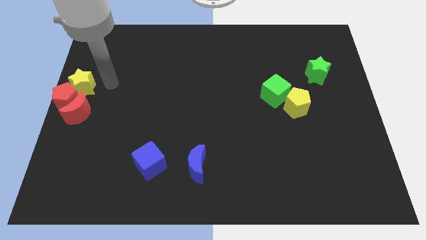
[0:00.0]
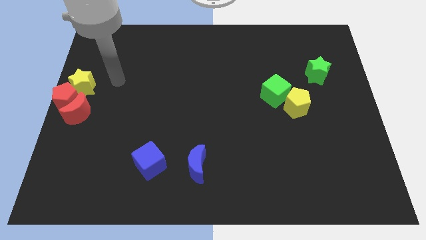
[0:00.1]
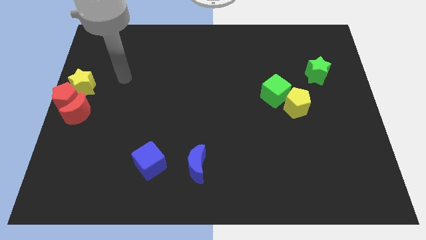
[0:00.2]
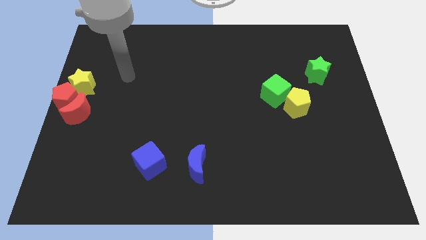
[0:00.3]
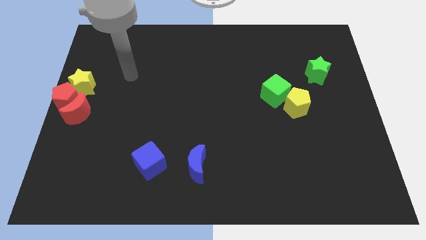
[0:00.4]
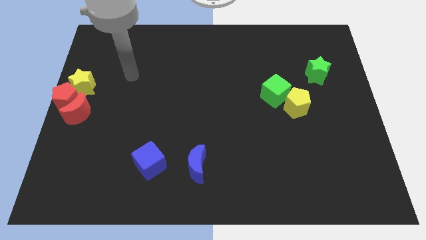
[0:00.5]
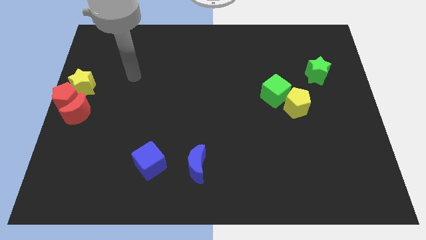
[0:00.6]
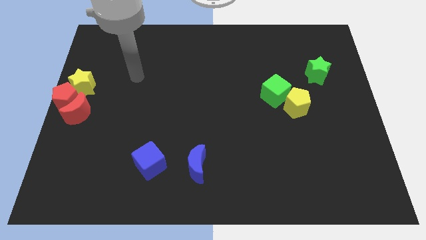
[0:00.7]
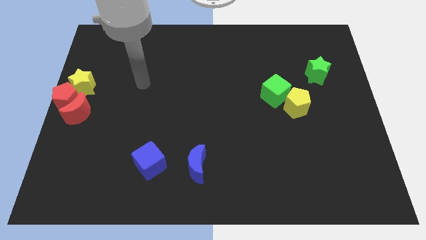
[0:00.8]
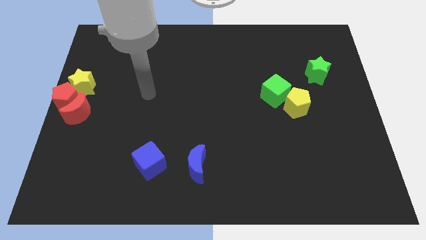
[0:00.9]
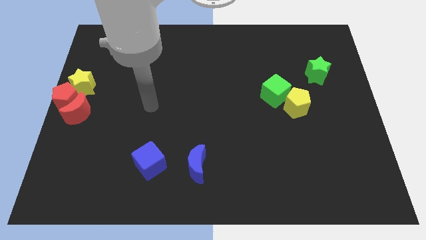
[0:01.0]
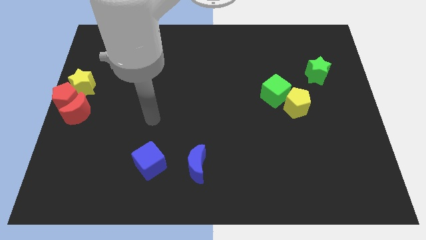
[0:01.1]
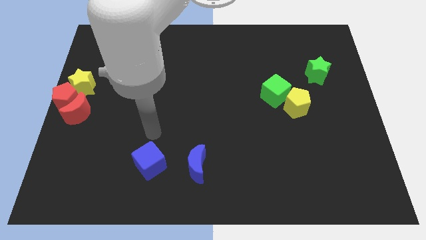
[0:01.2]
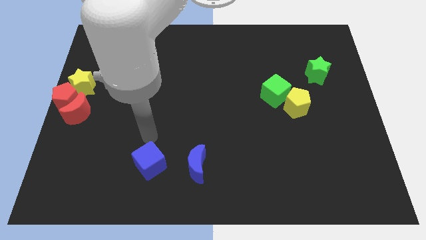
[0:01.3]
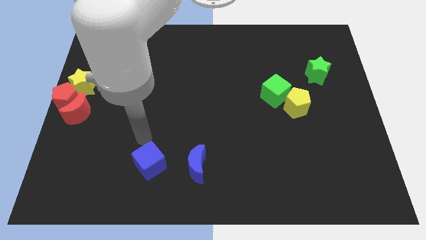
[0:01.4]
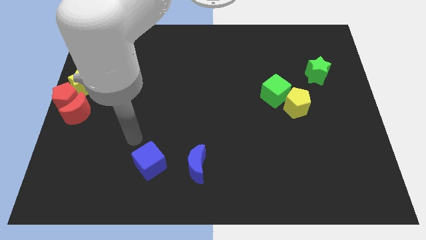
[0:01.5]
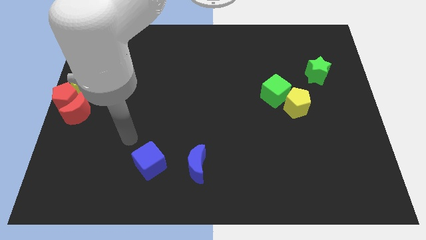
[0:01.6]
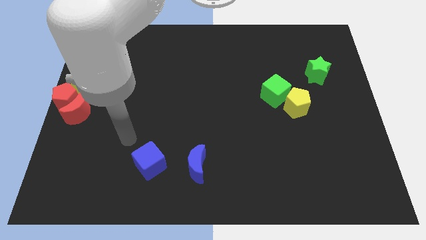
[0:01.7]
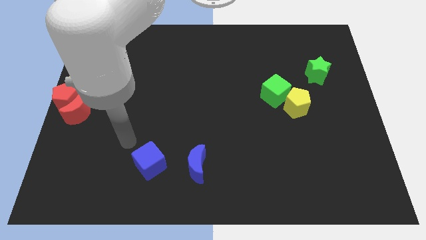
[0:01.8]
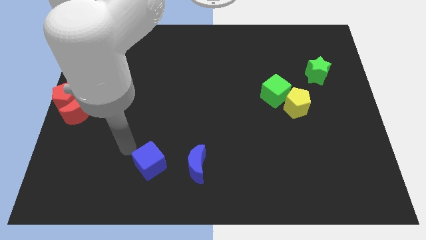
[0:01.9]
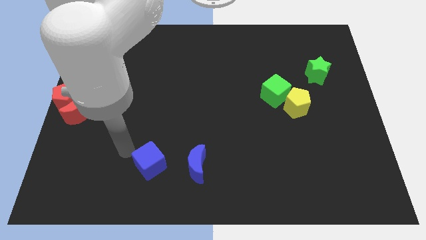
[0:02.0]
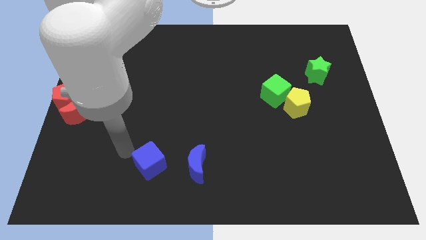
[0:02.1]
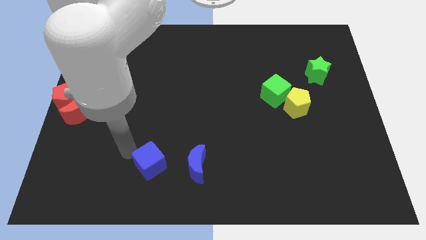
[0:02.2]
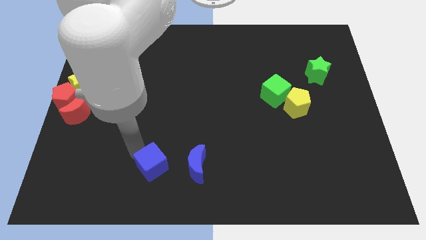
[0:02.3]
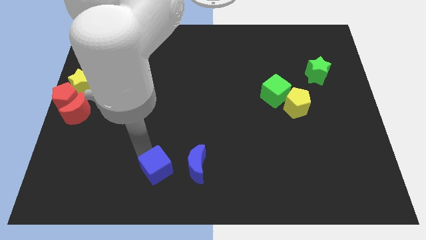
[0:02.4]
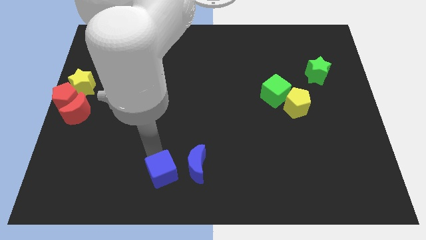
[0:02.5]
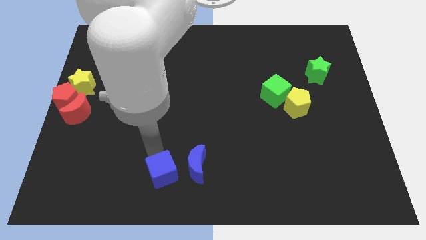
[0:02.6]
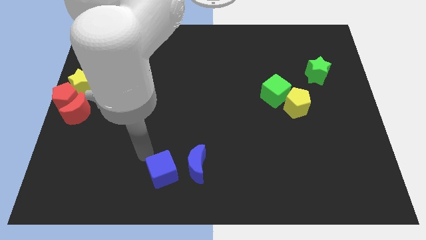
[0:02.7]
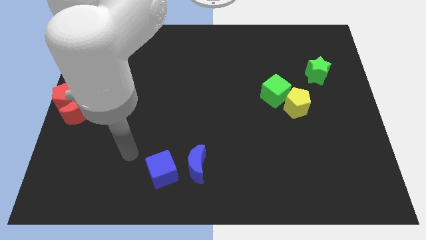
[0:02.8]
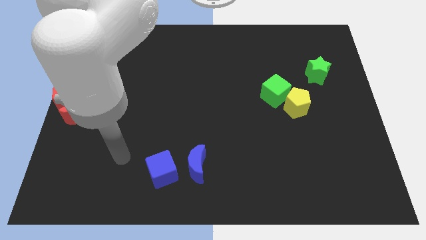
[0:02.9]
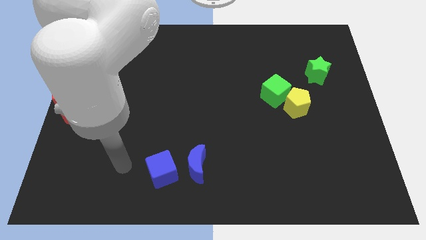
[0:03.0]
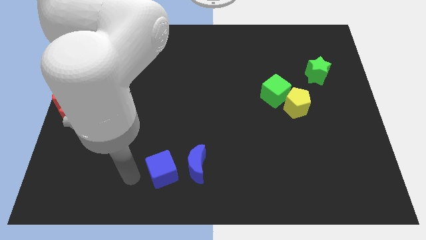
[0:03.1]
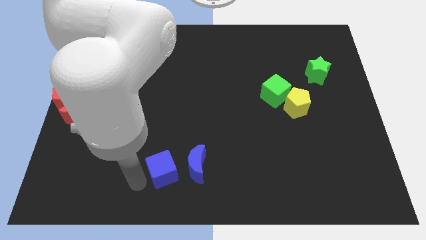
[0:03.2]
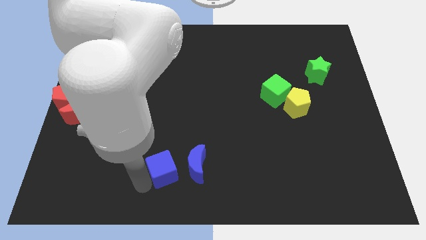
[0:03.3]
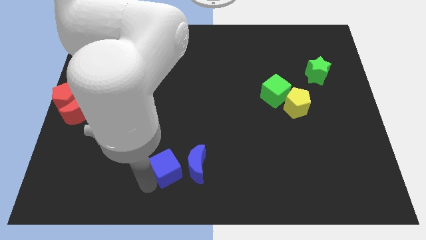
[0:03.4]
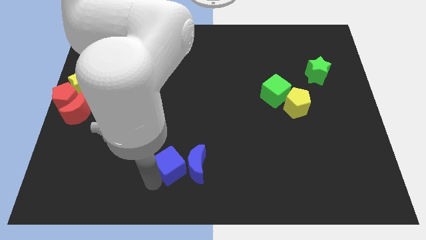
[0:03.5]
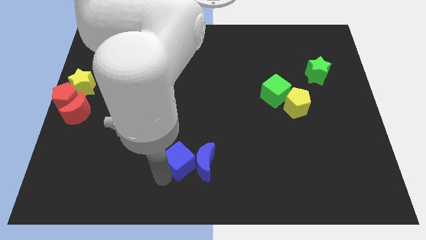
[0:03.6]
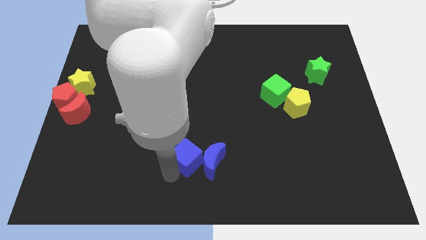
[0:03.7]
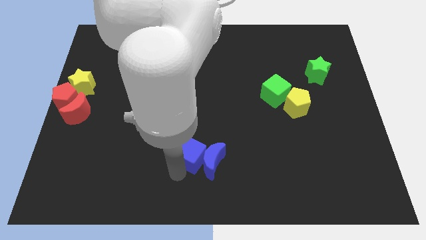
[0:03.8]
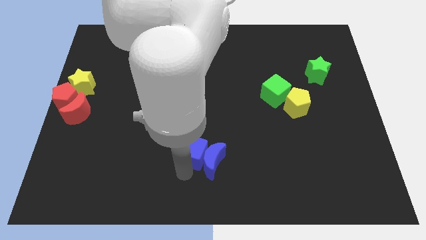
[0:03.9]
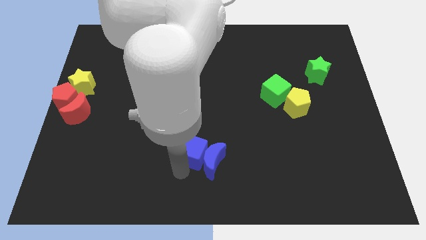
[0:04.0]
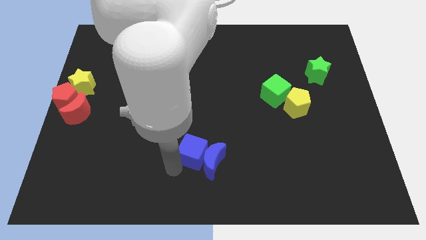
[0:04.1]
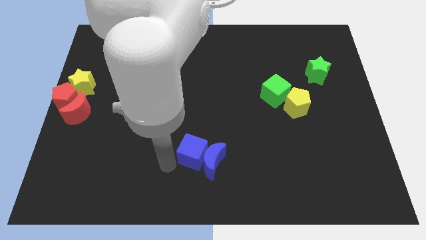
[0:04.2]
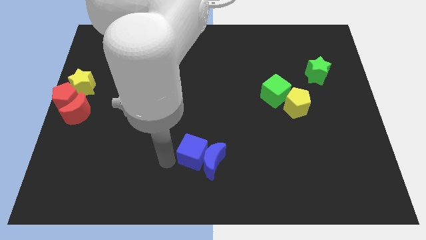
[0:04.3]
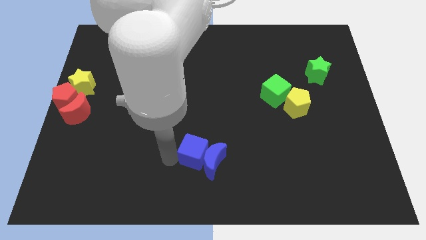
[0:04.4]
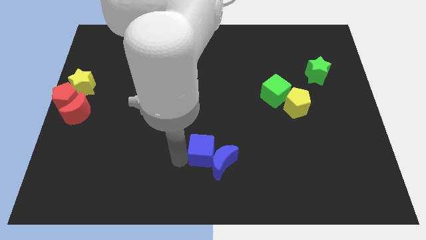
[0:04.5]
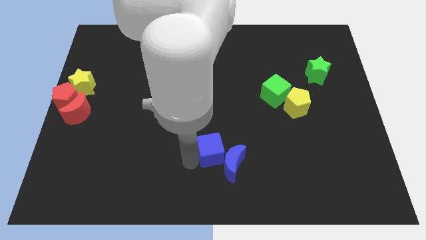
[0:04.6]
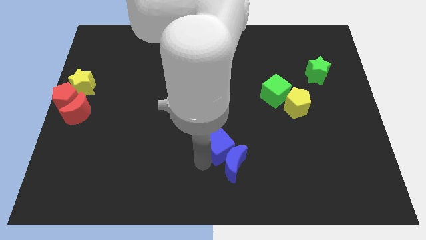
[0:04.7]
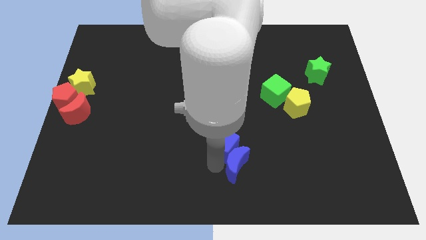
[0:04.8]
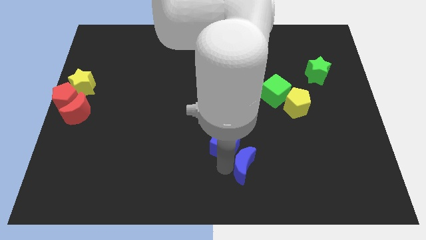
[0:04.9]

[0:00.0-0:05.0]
push the blue cube into the blue moon

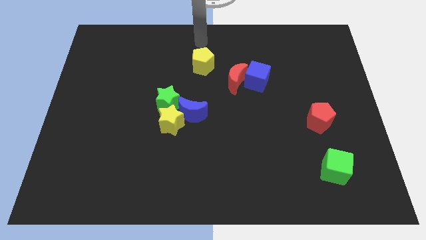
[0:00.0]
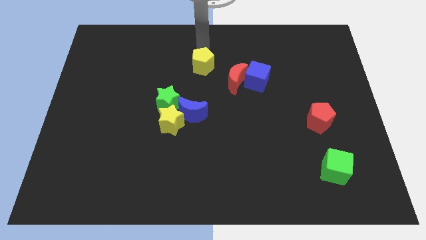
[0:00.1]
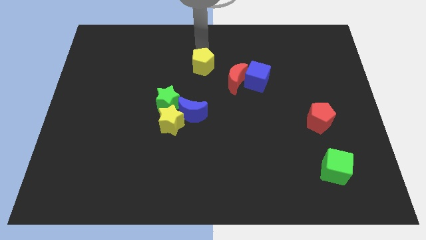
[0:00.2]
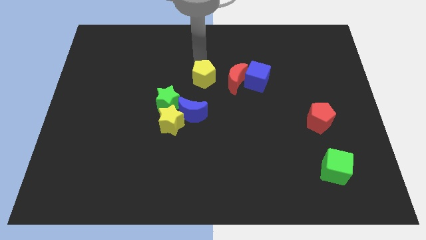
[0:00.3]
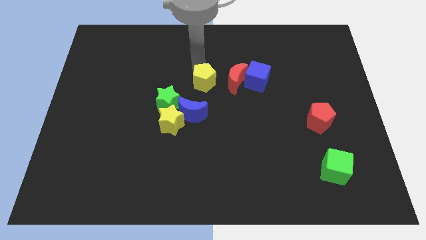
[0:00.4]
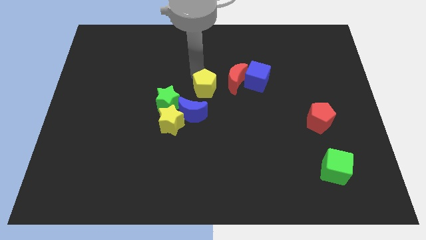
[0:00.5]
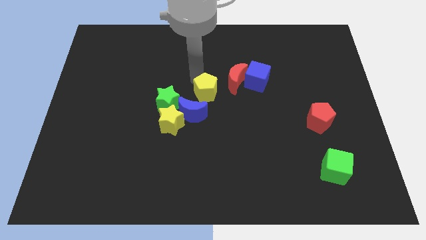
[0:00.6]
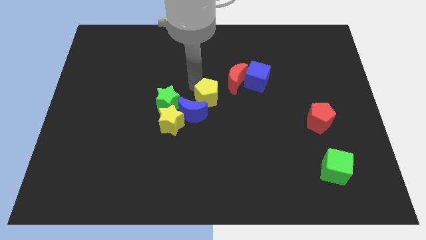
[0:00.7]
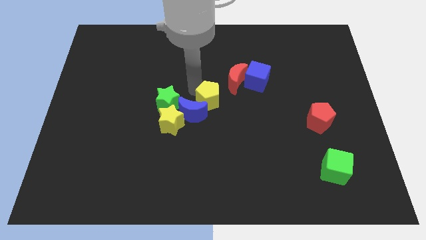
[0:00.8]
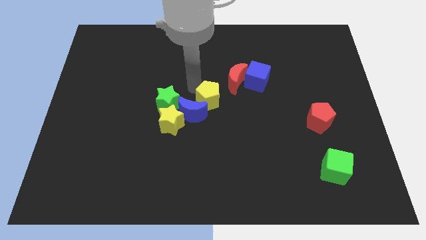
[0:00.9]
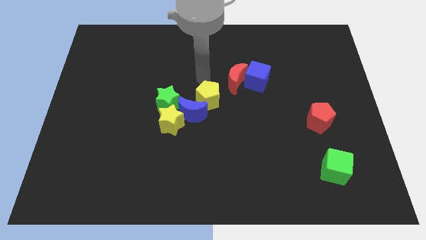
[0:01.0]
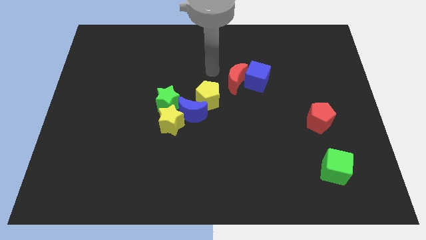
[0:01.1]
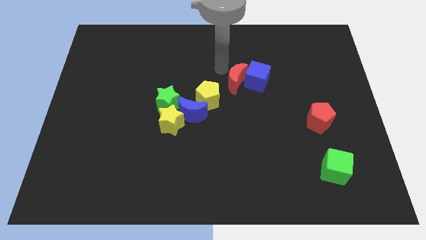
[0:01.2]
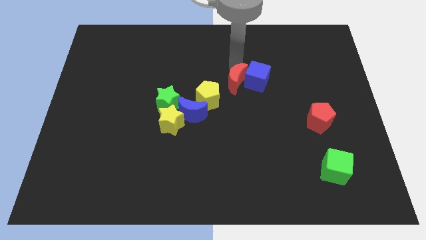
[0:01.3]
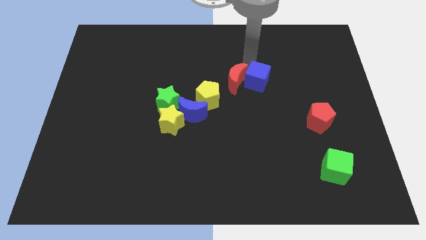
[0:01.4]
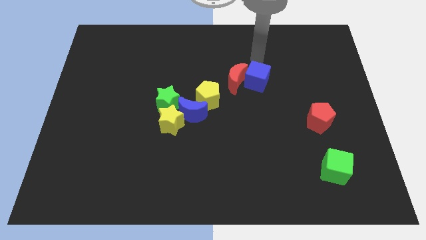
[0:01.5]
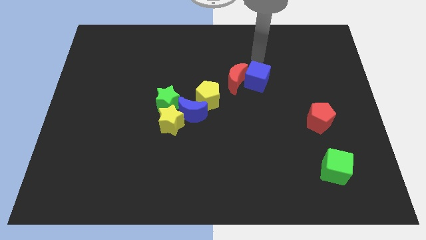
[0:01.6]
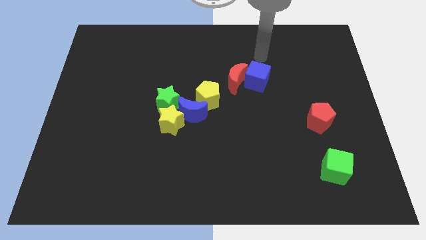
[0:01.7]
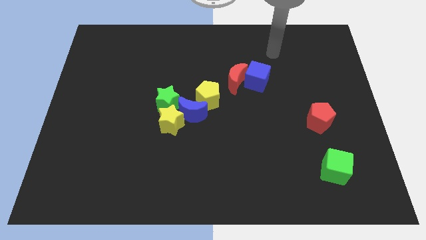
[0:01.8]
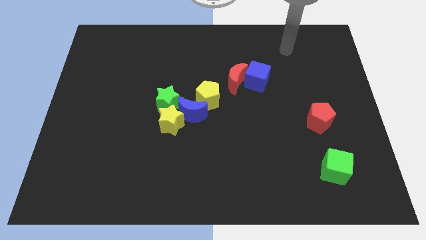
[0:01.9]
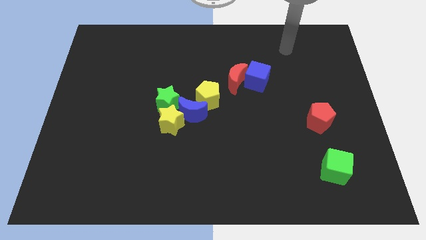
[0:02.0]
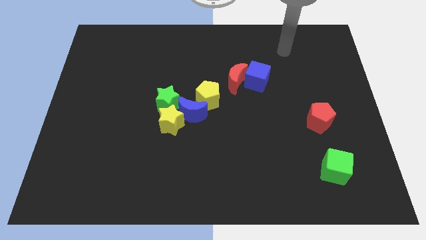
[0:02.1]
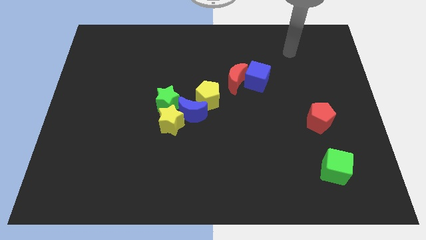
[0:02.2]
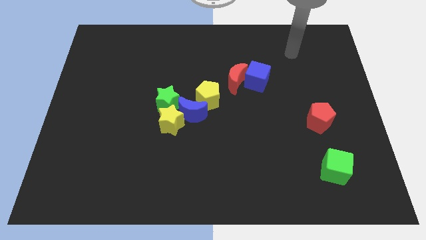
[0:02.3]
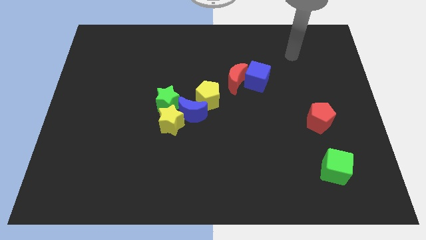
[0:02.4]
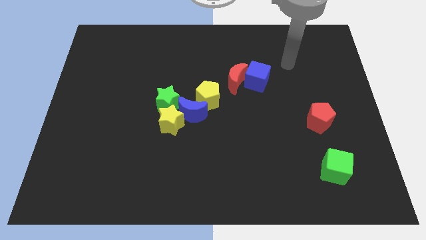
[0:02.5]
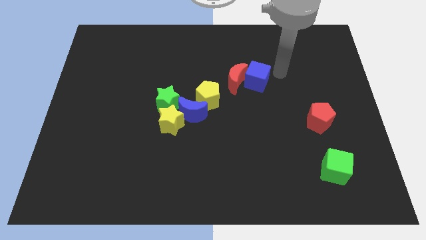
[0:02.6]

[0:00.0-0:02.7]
move the yellow pentagon towards the blue moon

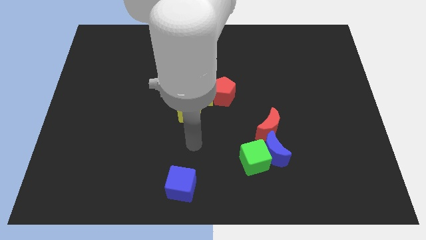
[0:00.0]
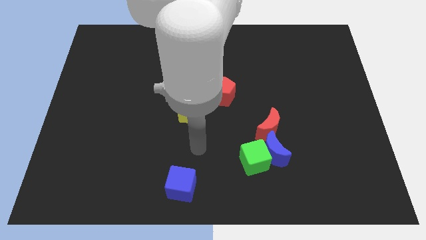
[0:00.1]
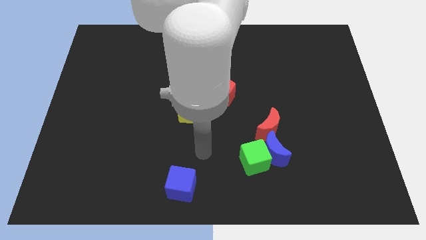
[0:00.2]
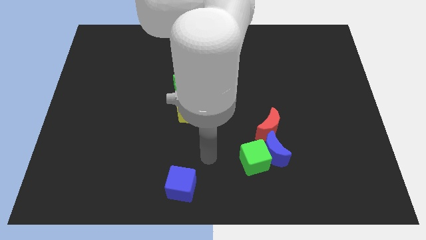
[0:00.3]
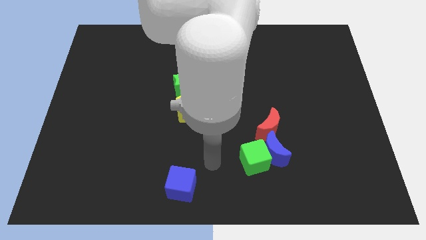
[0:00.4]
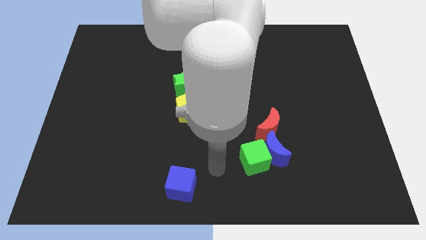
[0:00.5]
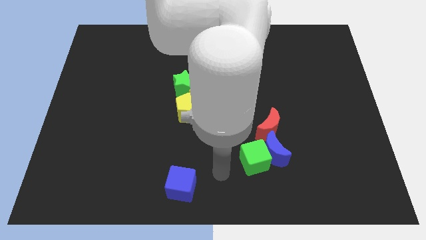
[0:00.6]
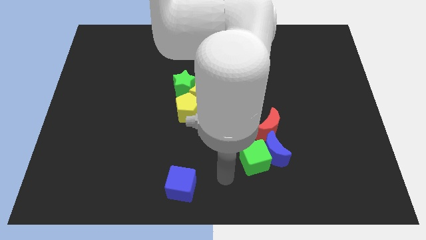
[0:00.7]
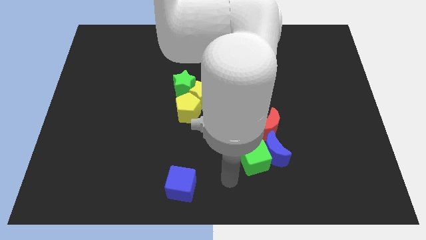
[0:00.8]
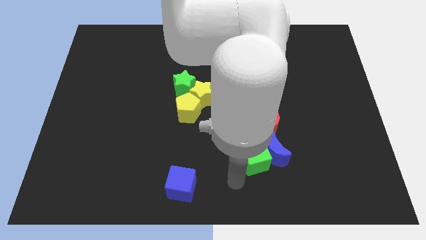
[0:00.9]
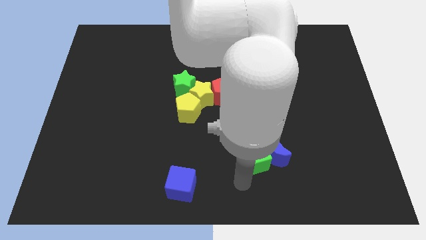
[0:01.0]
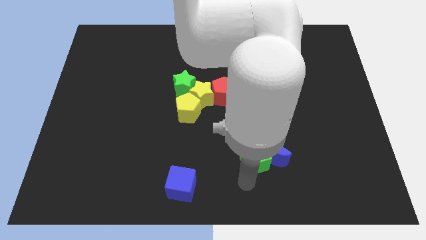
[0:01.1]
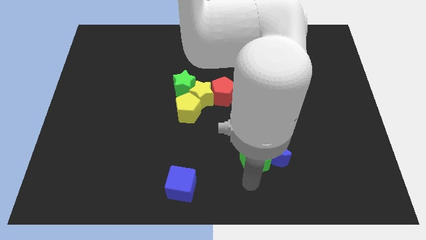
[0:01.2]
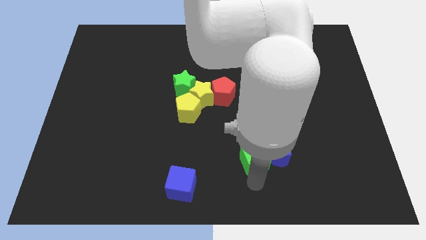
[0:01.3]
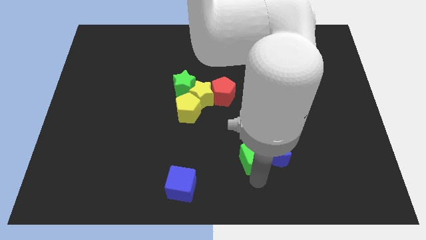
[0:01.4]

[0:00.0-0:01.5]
place the arm below the green cube
